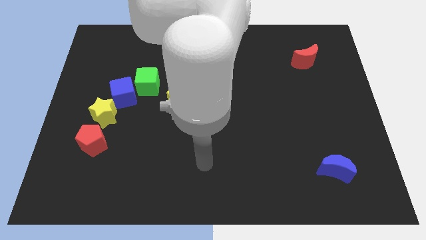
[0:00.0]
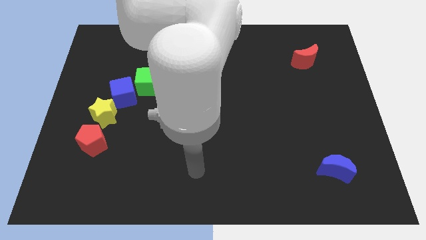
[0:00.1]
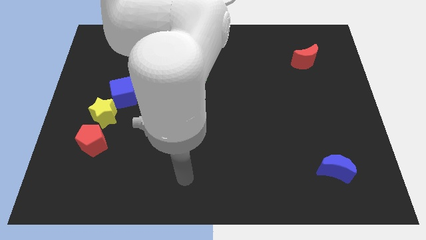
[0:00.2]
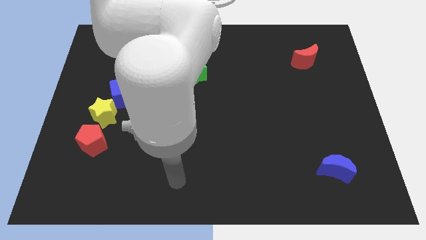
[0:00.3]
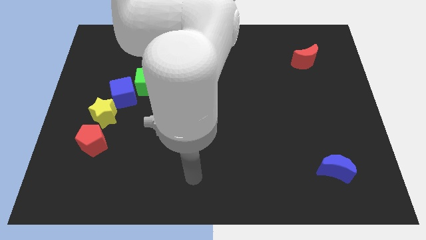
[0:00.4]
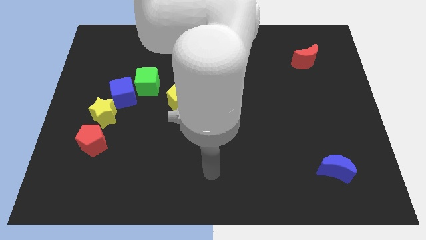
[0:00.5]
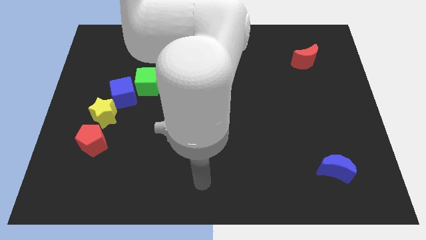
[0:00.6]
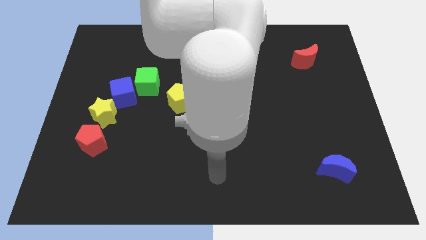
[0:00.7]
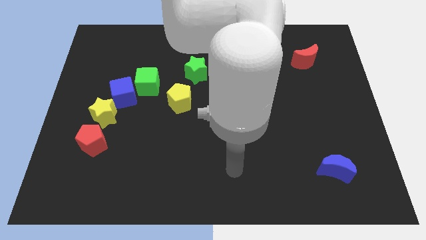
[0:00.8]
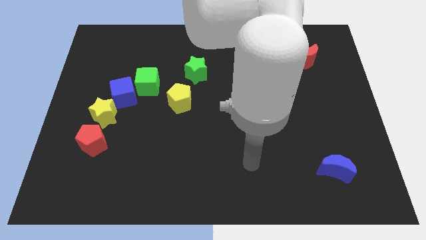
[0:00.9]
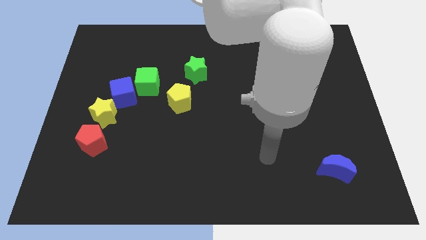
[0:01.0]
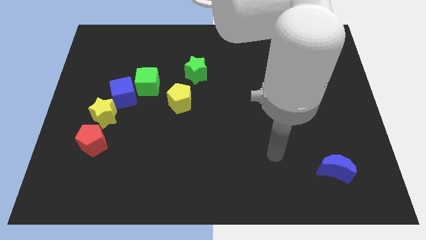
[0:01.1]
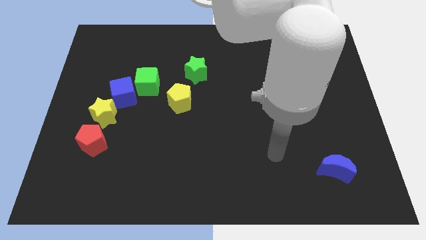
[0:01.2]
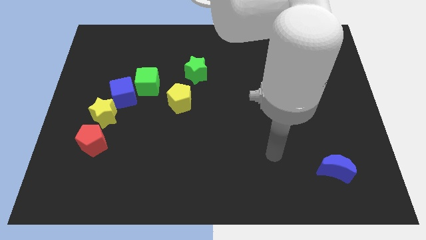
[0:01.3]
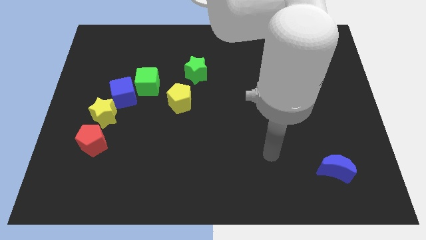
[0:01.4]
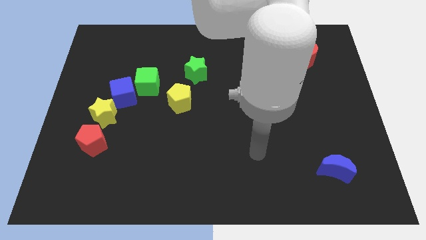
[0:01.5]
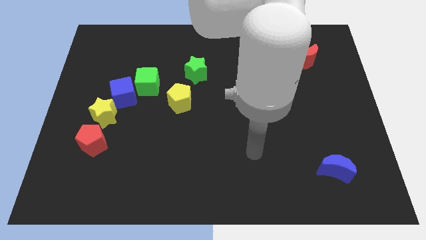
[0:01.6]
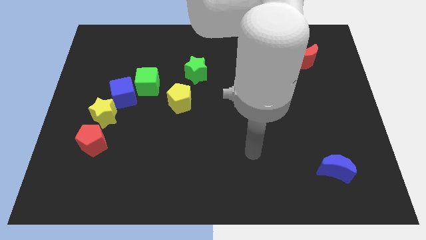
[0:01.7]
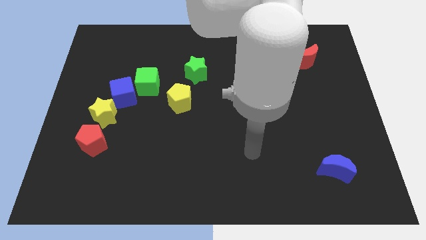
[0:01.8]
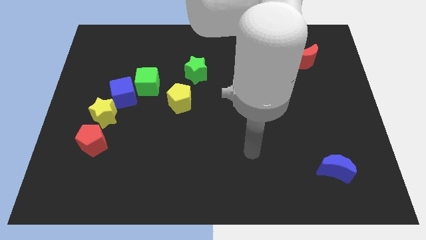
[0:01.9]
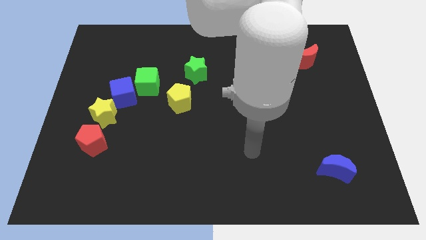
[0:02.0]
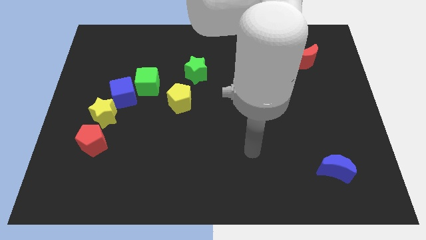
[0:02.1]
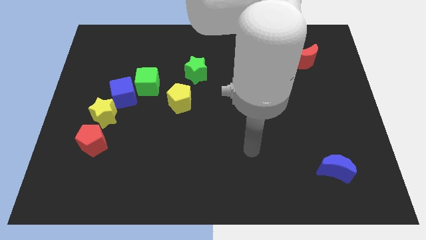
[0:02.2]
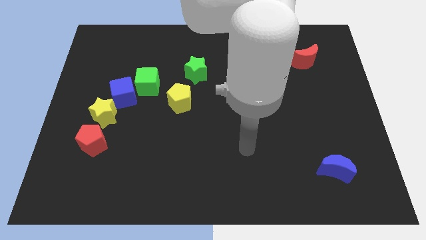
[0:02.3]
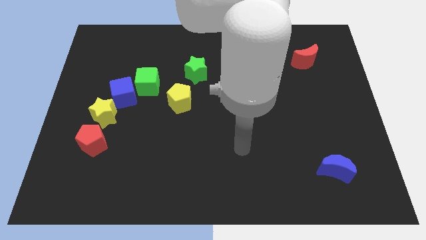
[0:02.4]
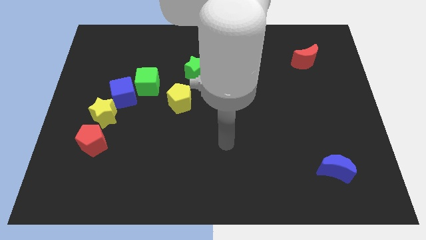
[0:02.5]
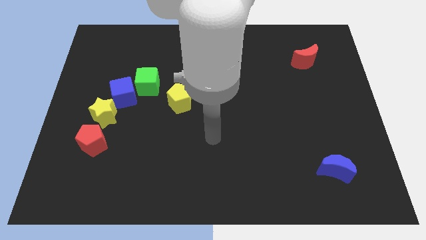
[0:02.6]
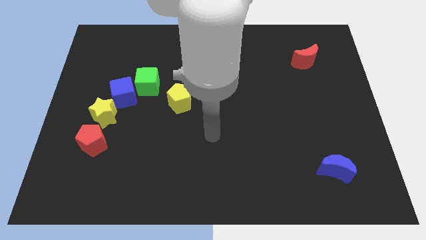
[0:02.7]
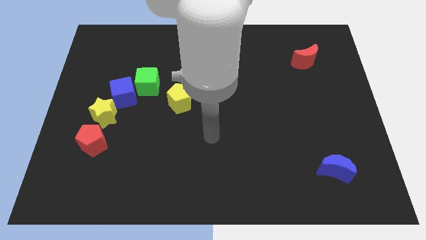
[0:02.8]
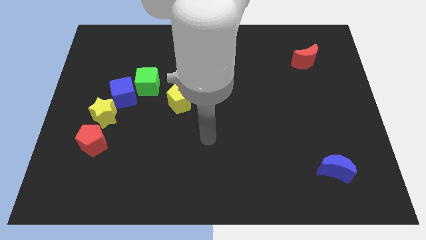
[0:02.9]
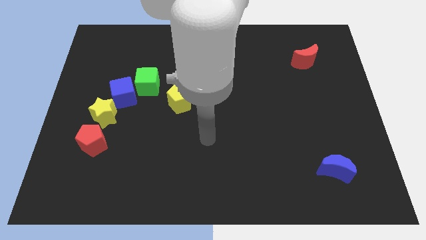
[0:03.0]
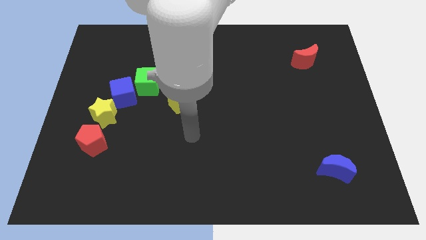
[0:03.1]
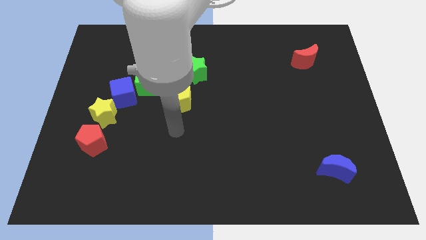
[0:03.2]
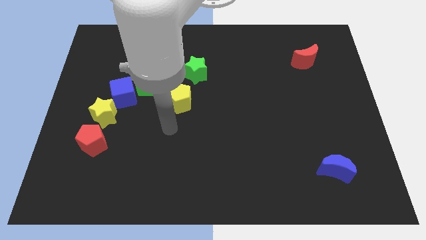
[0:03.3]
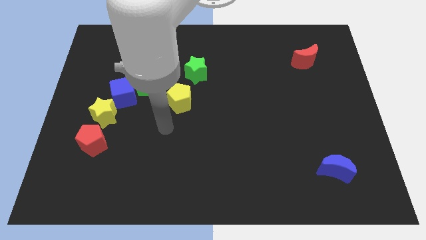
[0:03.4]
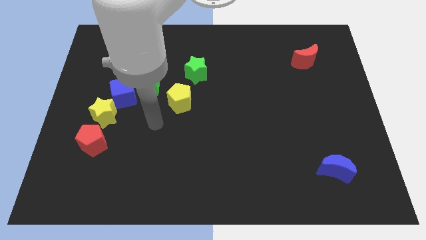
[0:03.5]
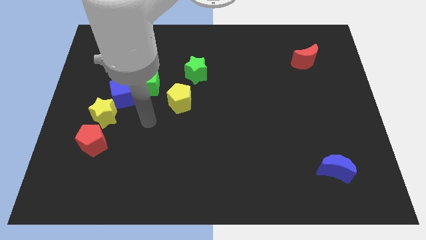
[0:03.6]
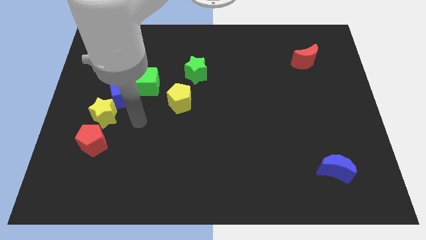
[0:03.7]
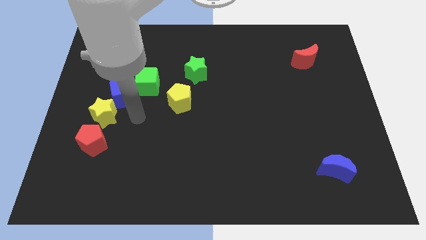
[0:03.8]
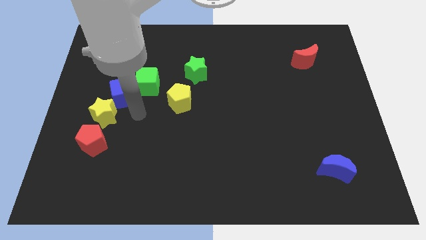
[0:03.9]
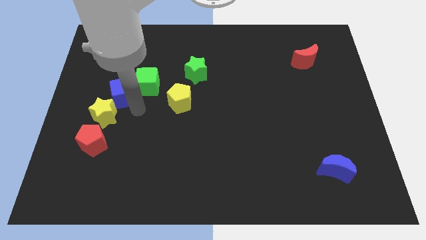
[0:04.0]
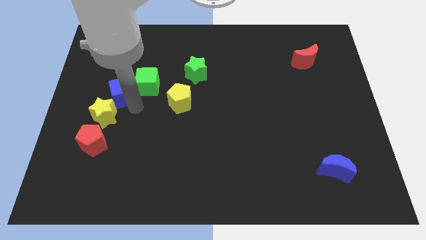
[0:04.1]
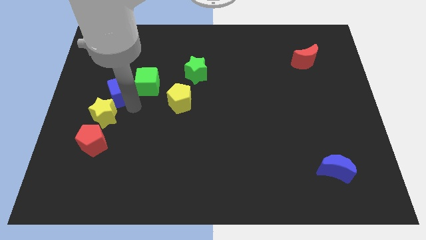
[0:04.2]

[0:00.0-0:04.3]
touch the blue cube with your arm

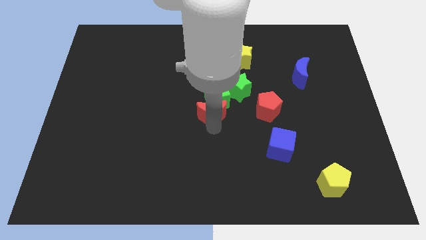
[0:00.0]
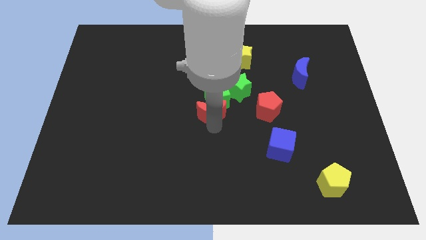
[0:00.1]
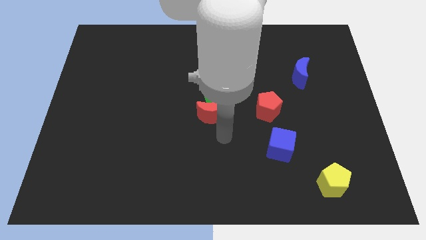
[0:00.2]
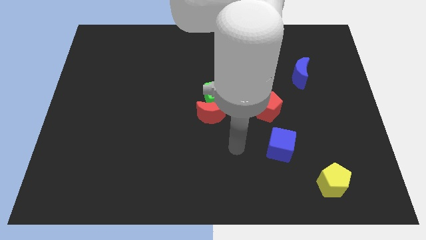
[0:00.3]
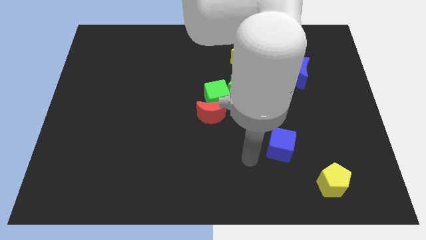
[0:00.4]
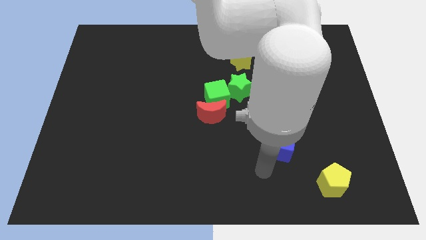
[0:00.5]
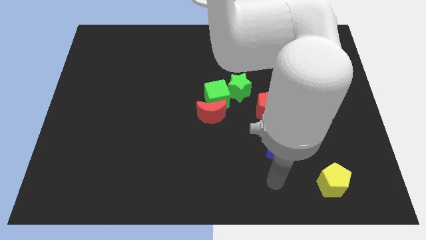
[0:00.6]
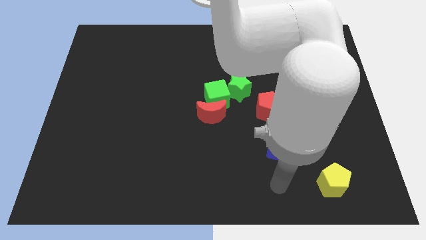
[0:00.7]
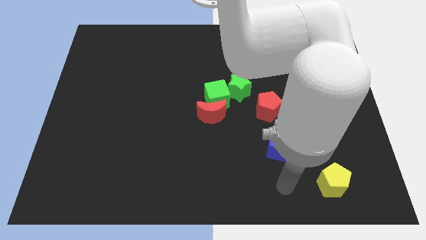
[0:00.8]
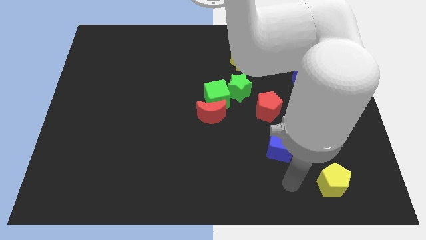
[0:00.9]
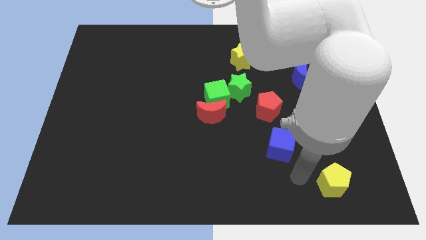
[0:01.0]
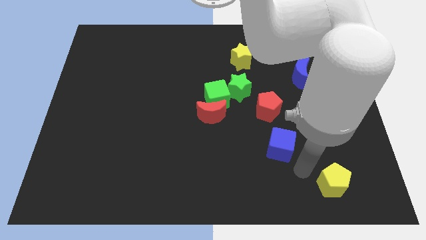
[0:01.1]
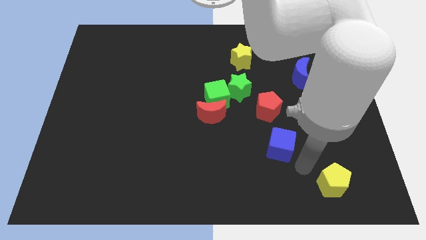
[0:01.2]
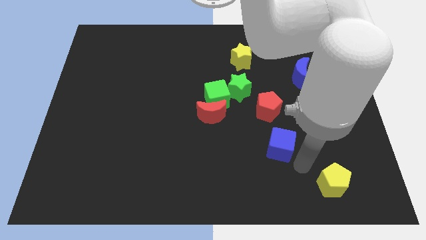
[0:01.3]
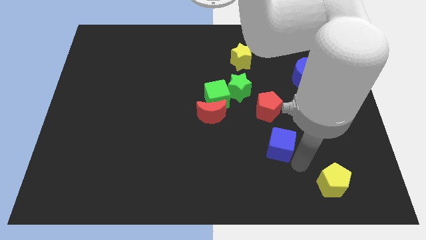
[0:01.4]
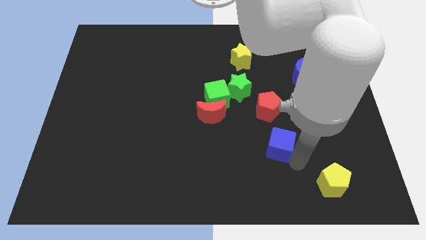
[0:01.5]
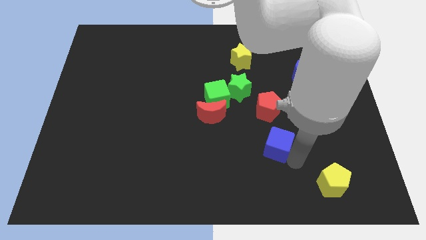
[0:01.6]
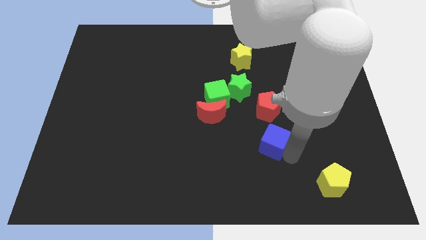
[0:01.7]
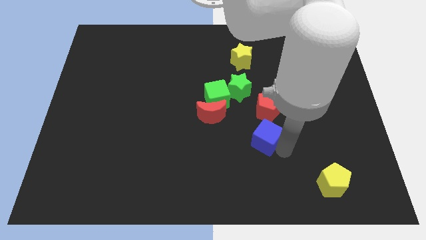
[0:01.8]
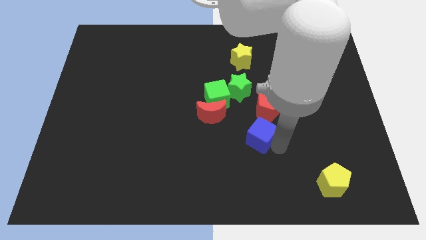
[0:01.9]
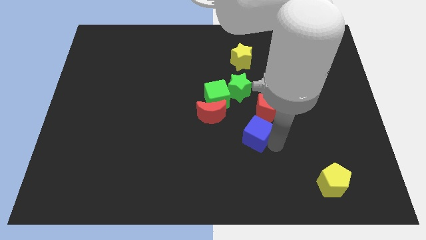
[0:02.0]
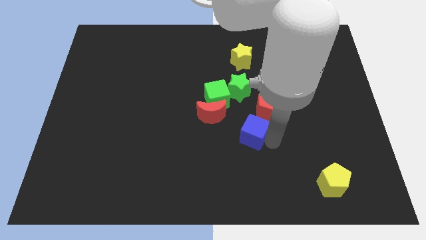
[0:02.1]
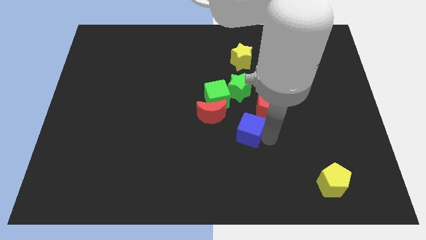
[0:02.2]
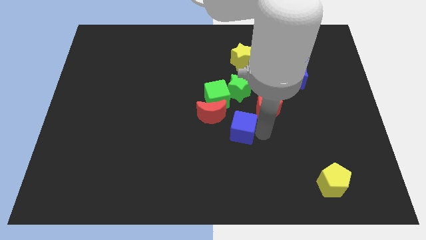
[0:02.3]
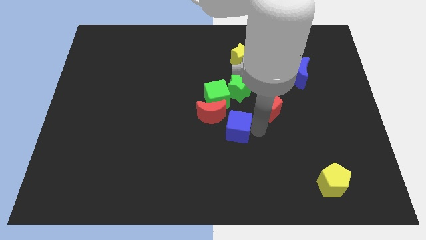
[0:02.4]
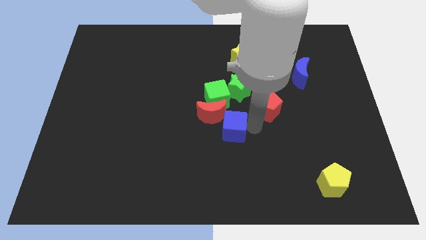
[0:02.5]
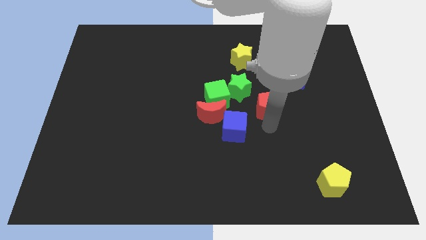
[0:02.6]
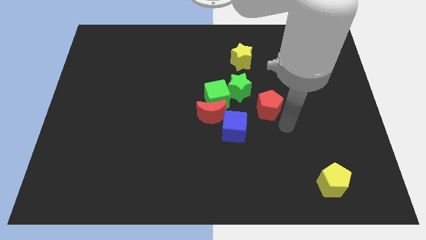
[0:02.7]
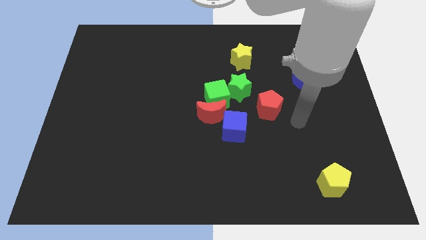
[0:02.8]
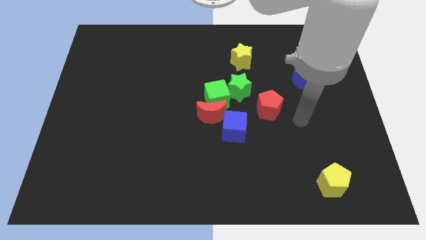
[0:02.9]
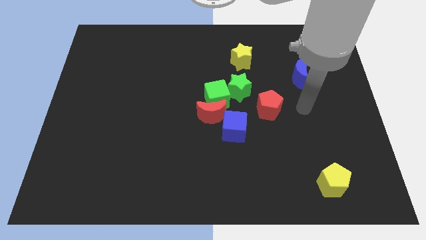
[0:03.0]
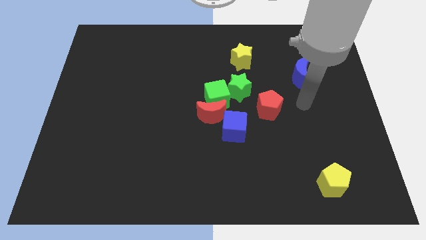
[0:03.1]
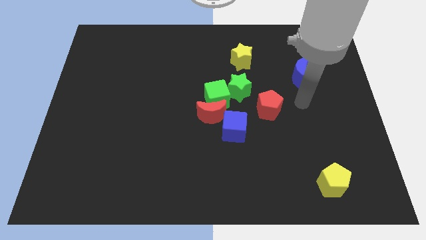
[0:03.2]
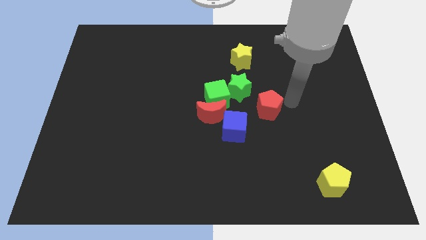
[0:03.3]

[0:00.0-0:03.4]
move the blue cube to the bottom of the green star

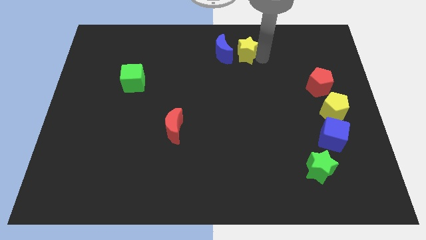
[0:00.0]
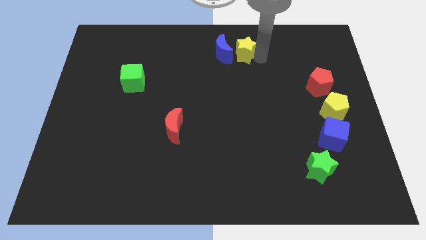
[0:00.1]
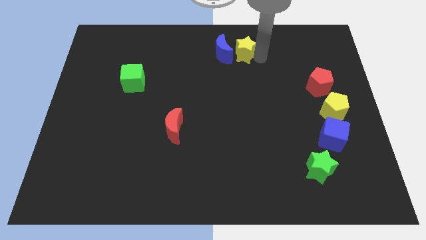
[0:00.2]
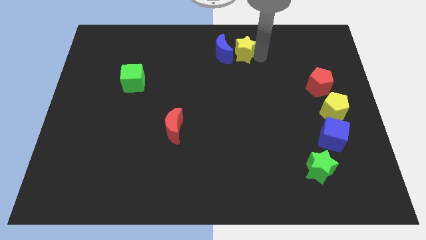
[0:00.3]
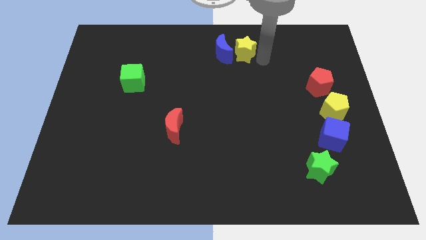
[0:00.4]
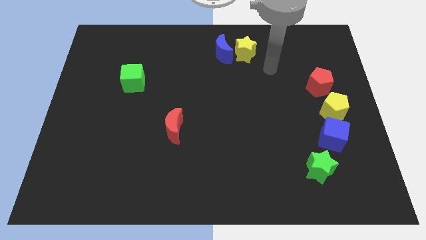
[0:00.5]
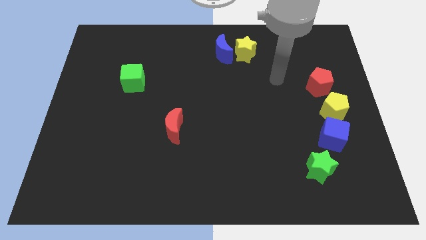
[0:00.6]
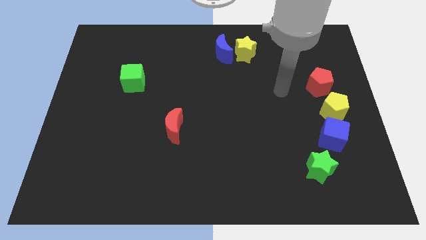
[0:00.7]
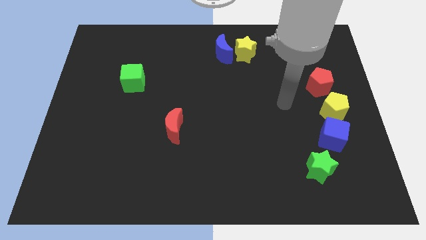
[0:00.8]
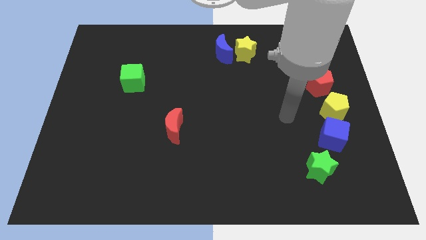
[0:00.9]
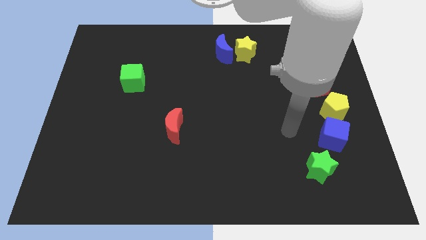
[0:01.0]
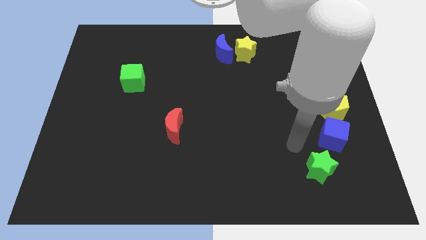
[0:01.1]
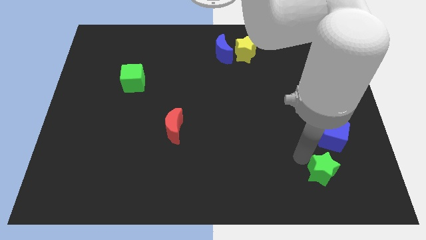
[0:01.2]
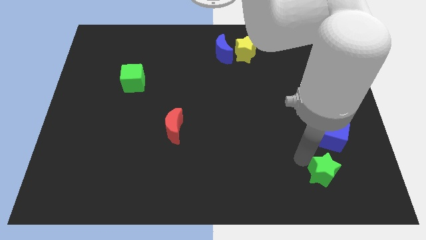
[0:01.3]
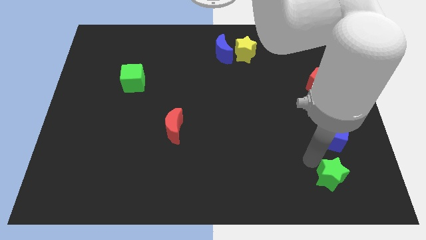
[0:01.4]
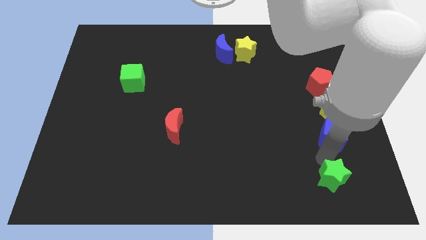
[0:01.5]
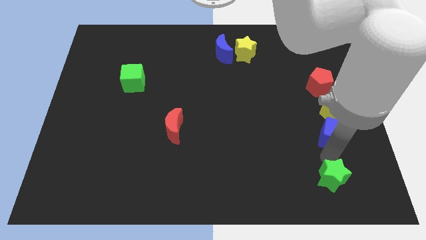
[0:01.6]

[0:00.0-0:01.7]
slightly push the green star towards the bottom right
